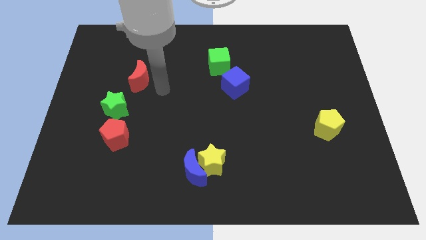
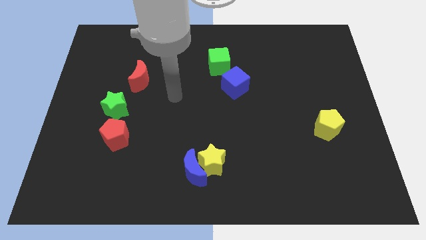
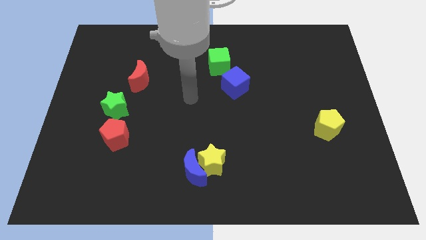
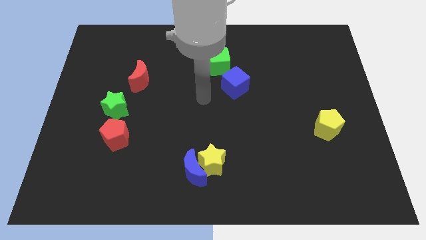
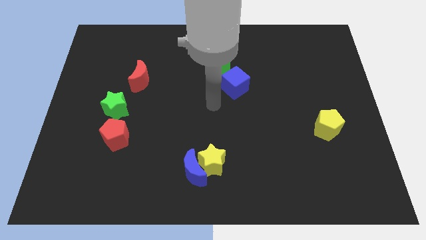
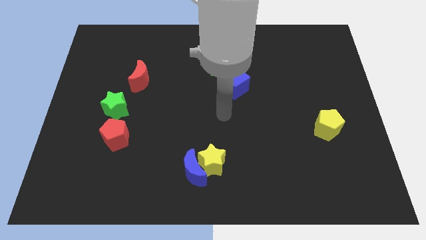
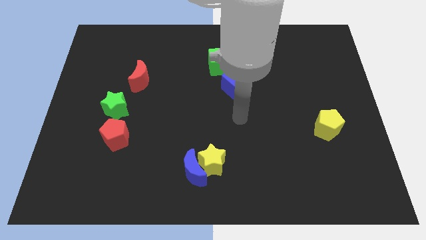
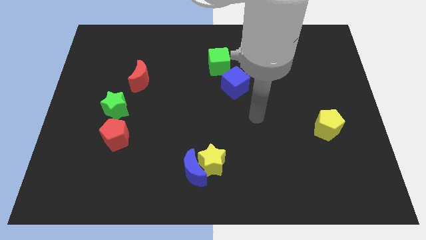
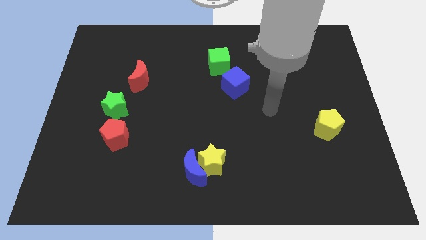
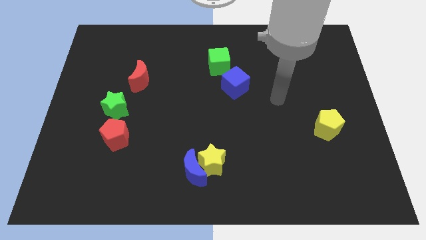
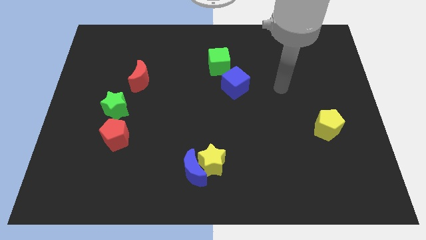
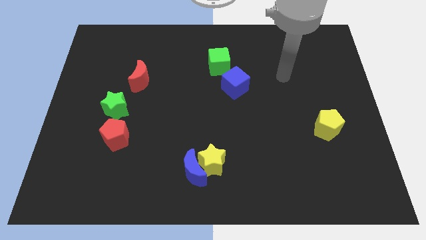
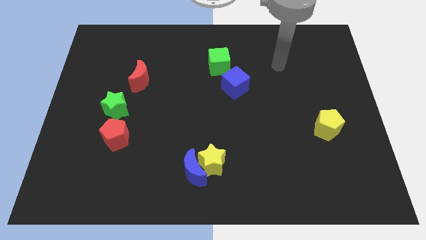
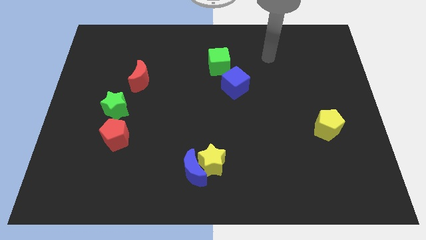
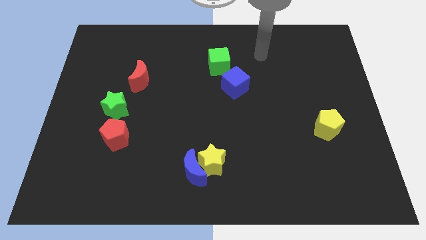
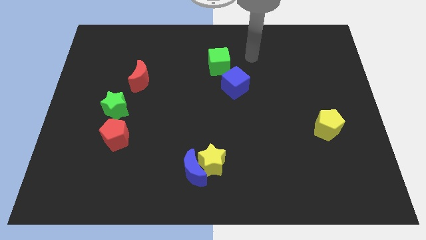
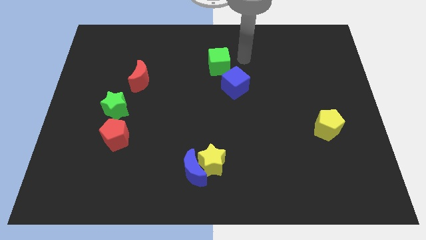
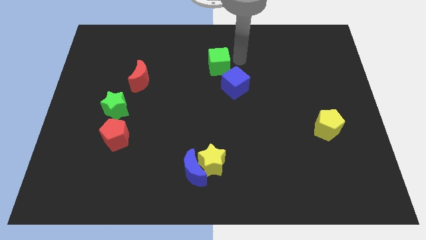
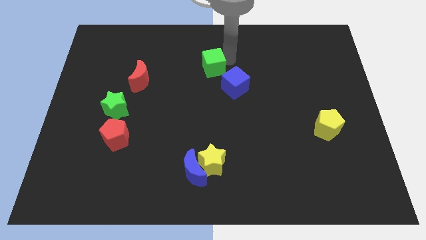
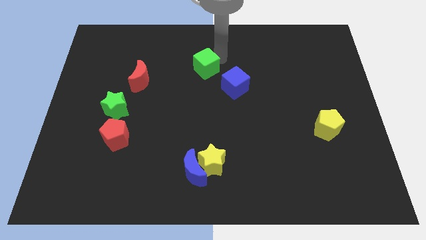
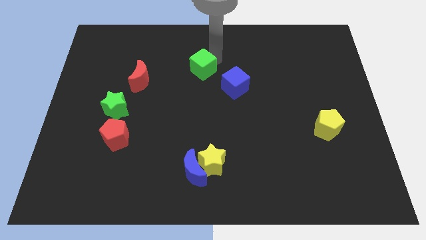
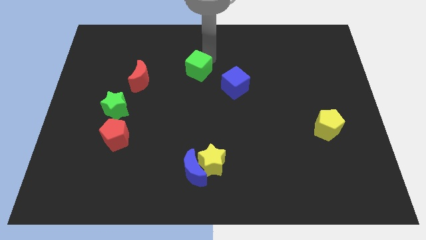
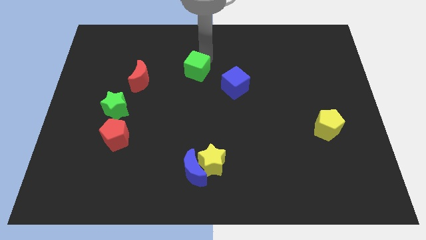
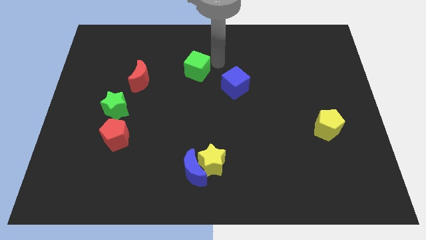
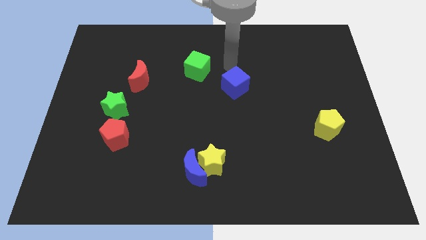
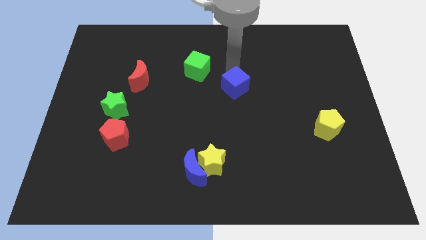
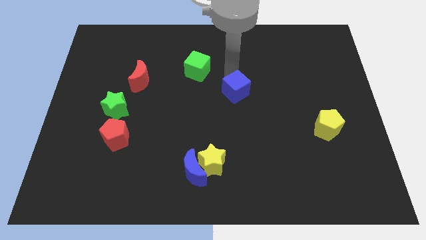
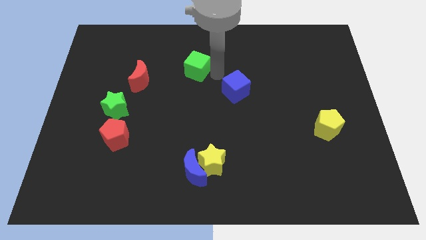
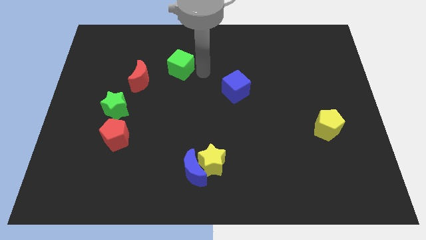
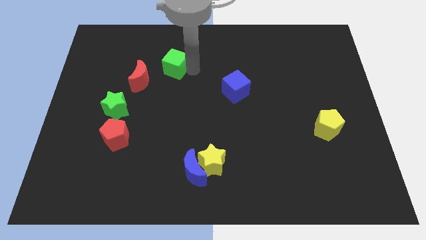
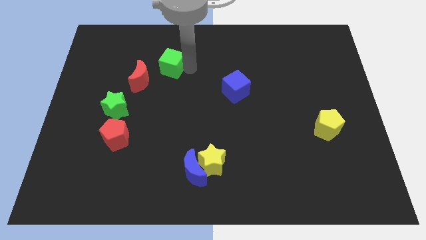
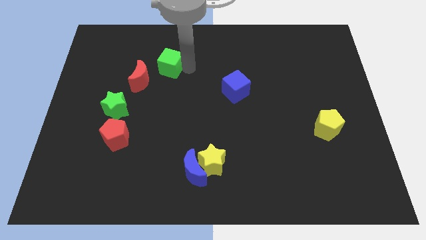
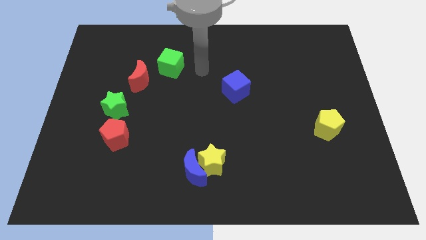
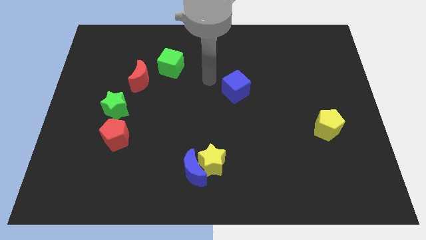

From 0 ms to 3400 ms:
push green cube towards red crescent

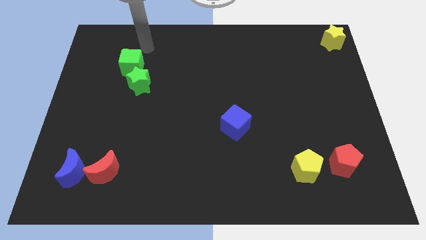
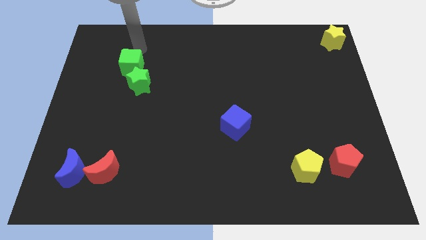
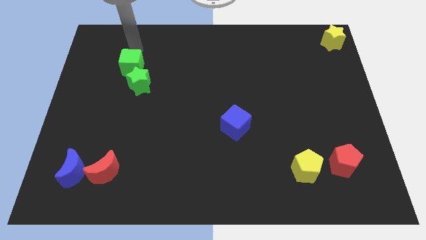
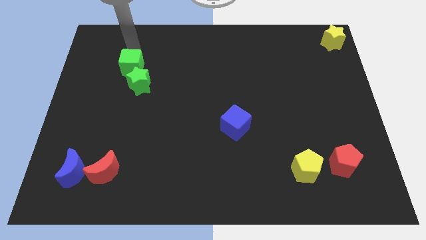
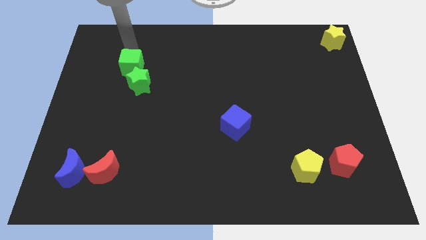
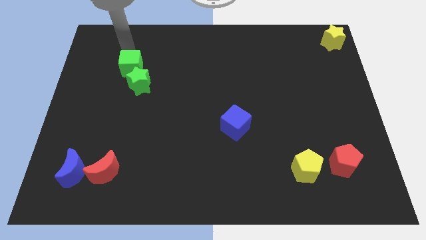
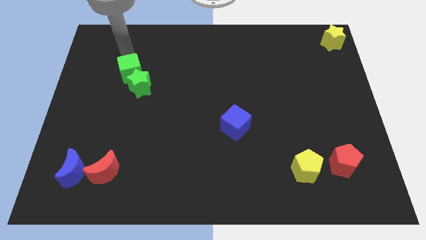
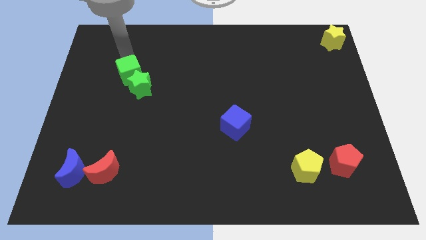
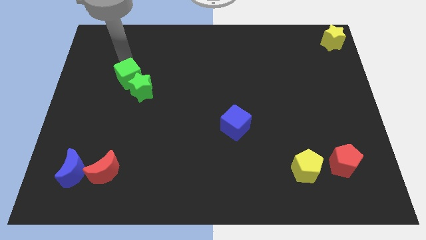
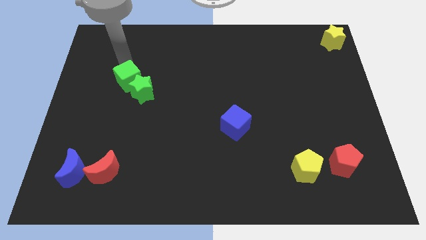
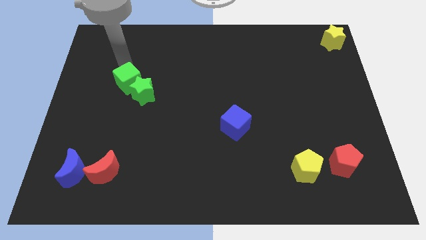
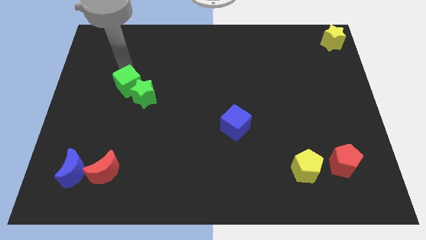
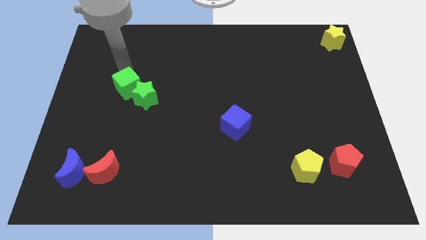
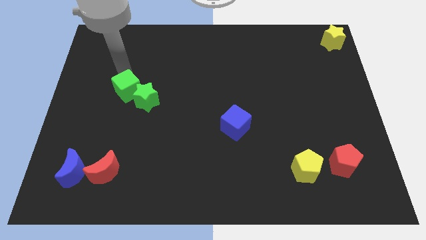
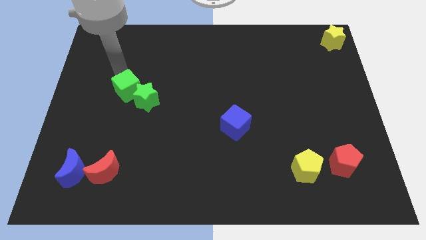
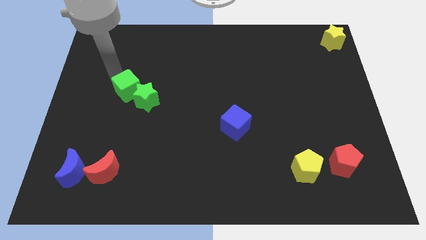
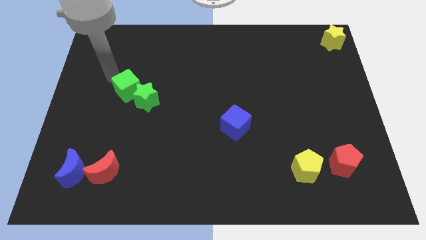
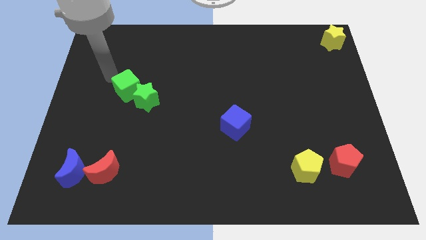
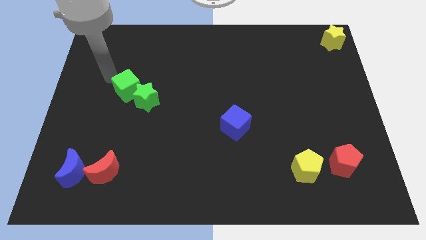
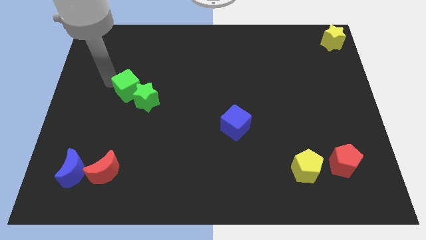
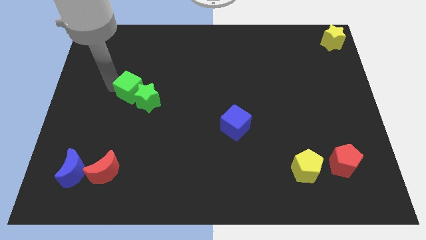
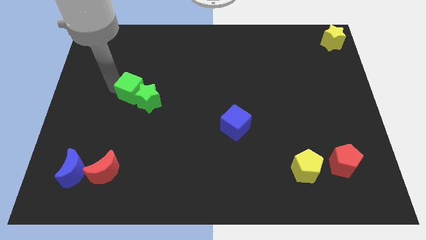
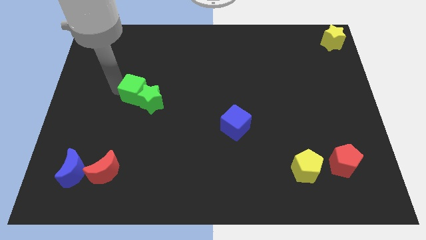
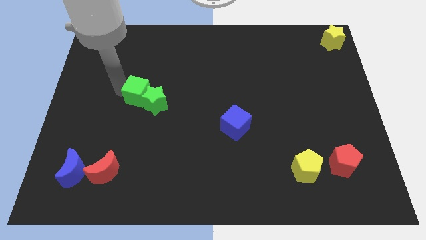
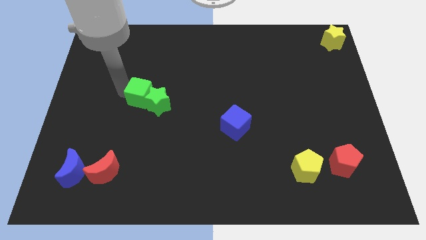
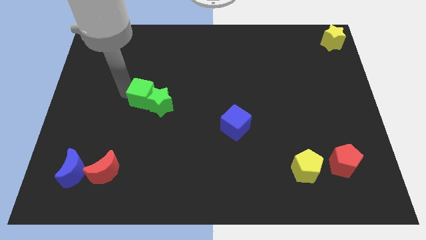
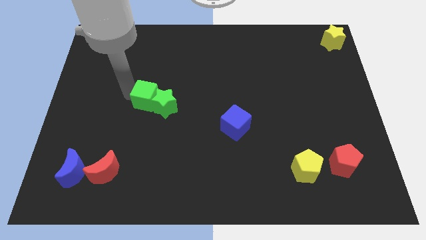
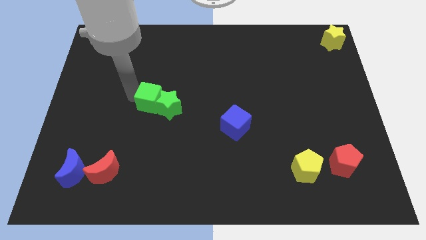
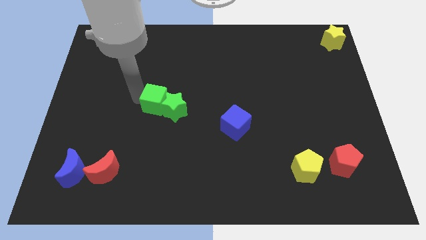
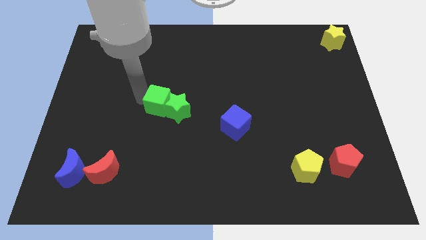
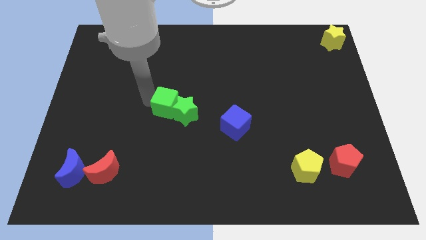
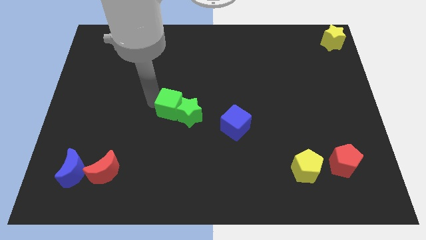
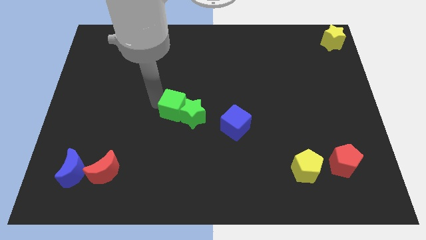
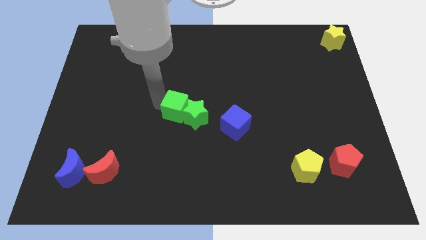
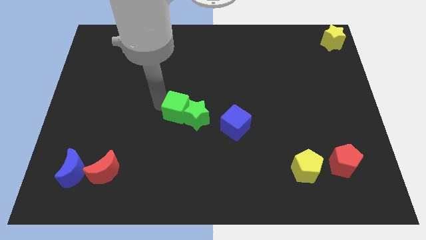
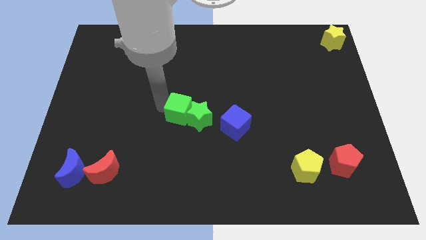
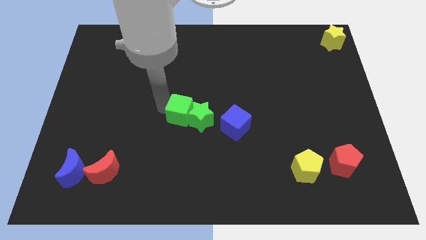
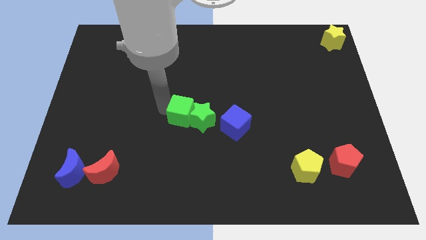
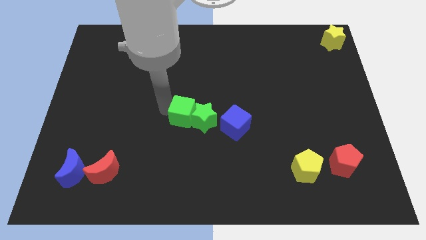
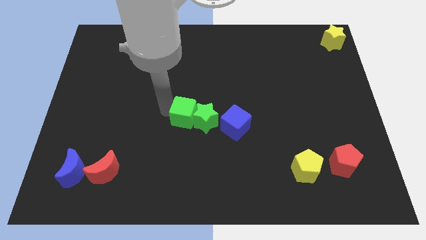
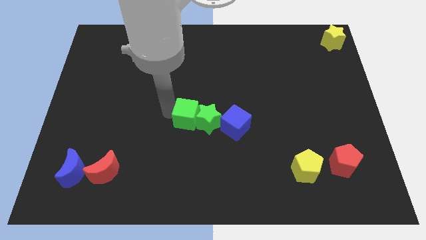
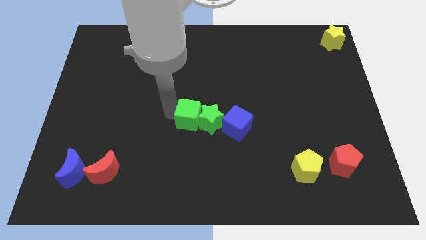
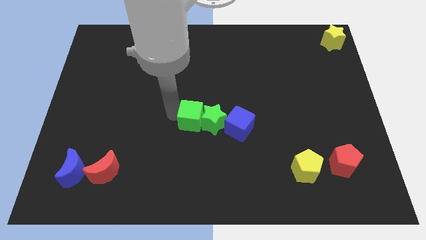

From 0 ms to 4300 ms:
move the green blocks to the left of blue cube

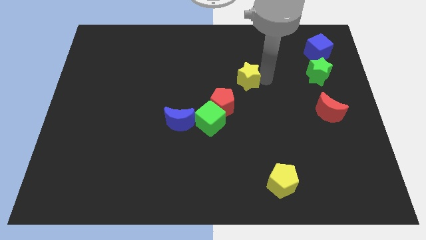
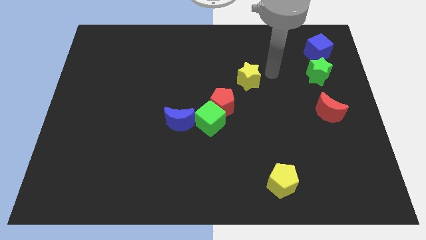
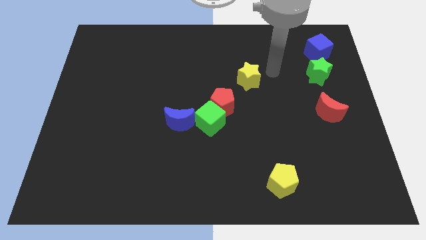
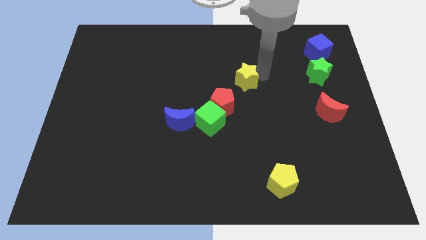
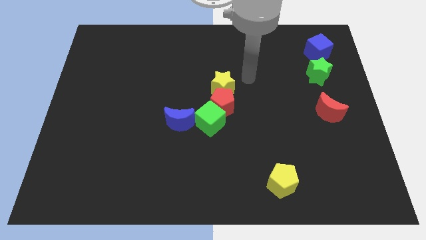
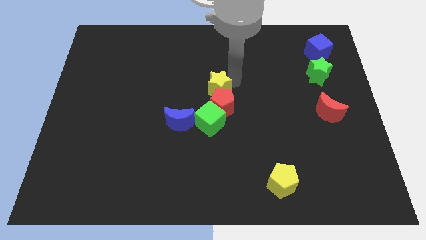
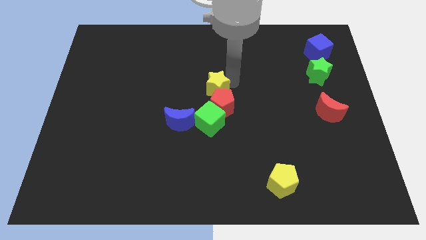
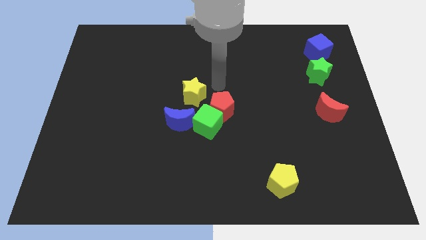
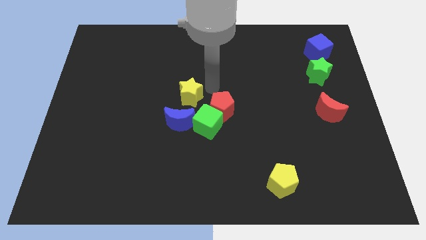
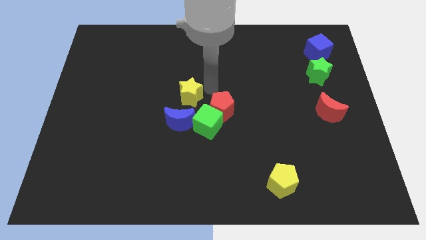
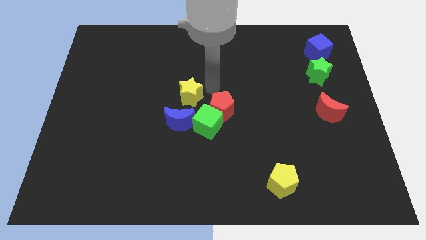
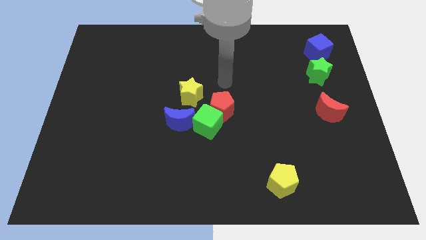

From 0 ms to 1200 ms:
place yellow star in the center
